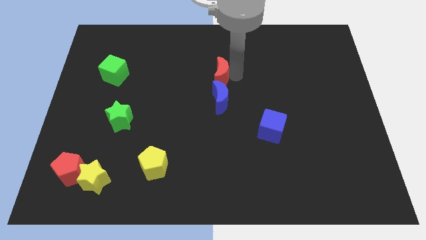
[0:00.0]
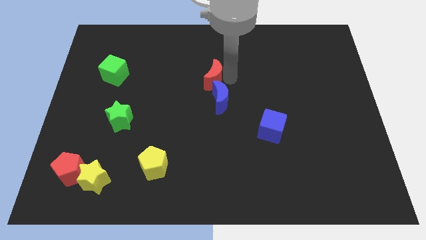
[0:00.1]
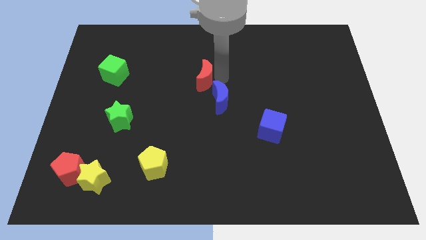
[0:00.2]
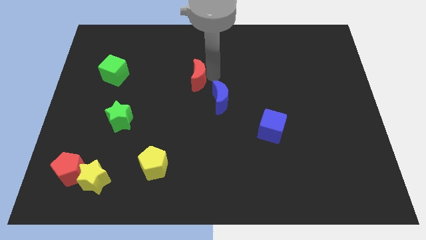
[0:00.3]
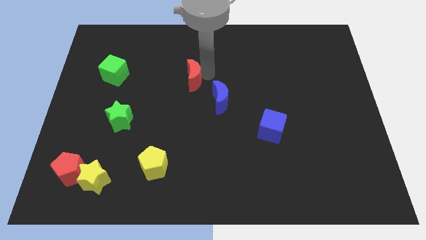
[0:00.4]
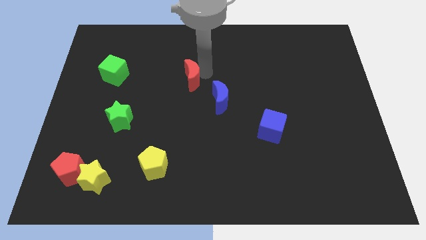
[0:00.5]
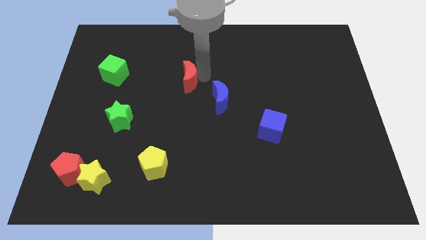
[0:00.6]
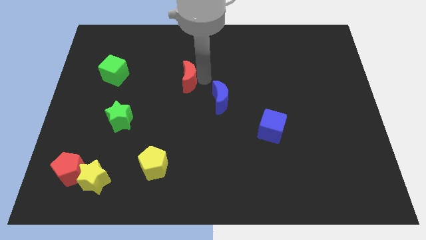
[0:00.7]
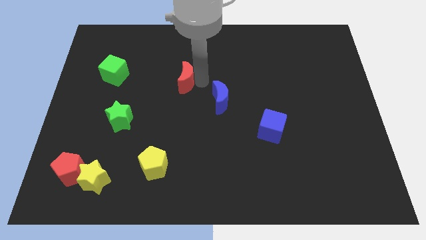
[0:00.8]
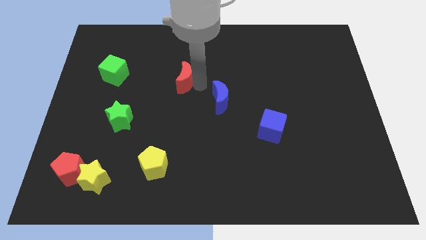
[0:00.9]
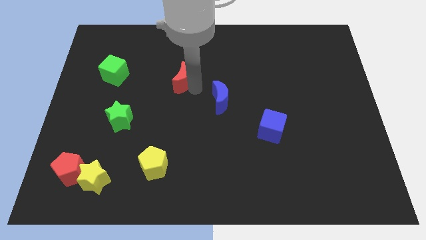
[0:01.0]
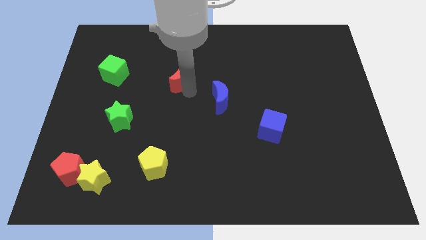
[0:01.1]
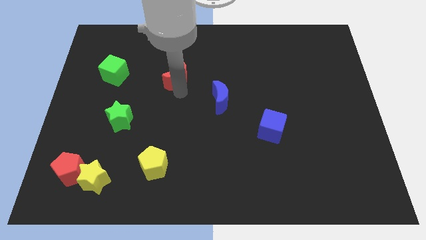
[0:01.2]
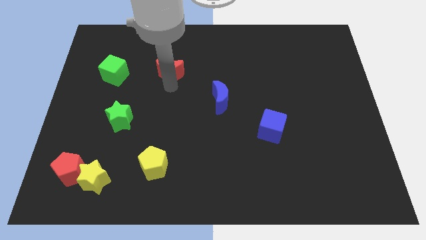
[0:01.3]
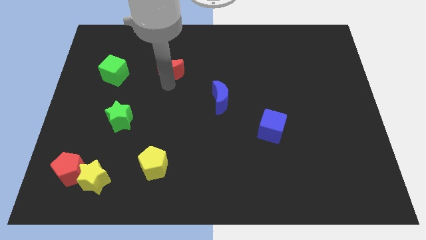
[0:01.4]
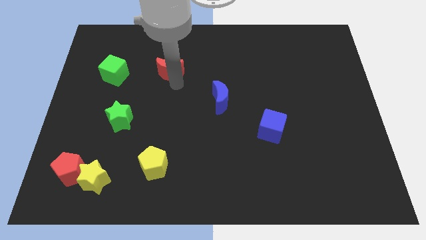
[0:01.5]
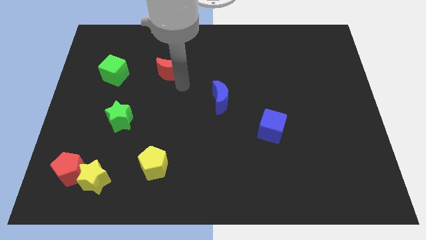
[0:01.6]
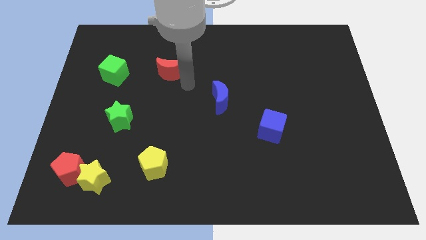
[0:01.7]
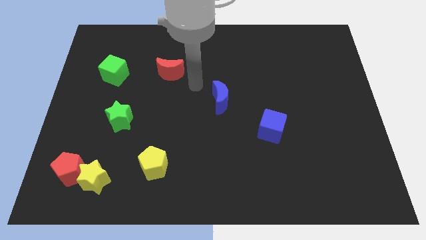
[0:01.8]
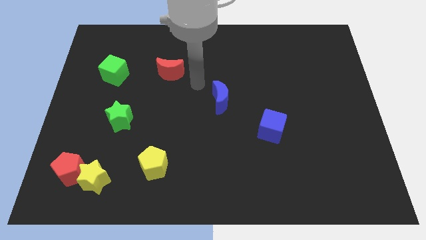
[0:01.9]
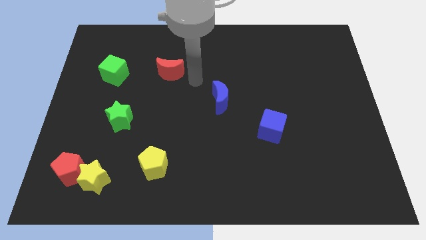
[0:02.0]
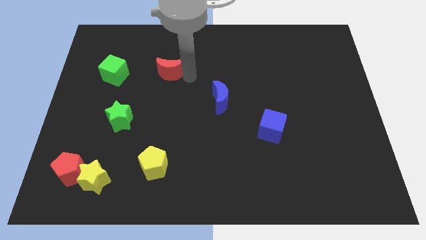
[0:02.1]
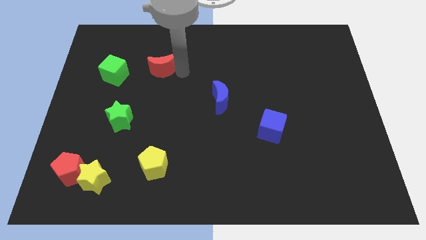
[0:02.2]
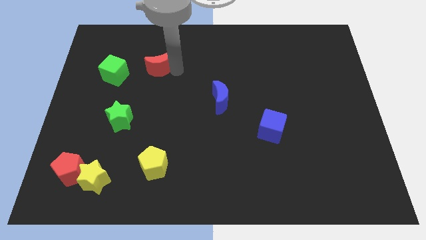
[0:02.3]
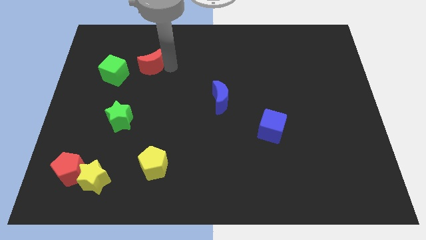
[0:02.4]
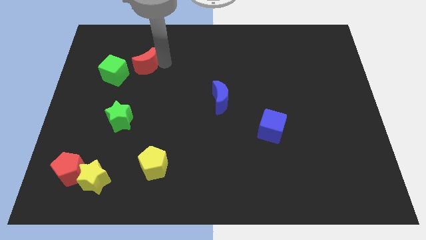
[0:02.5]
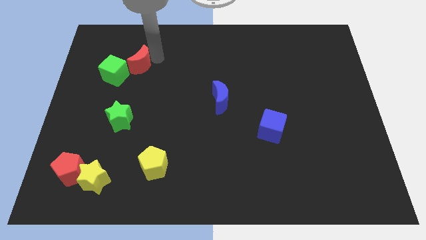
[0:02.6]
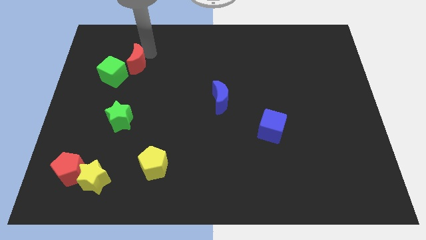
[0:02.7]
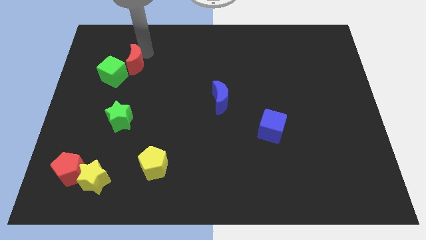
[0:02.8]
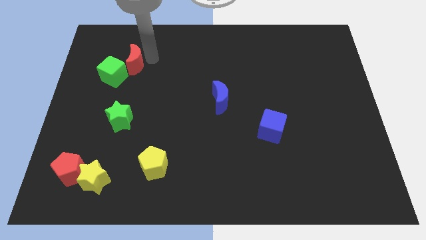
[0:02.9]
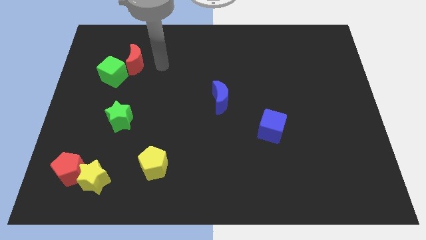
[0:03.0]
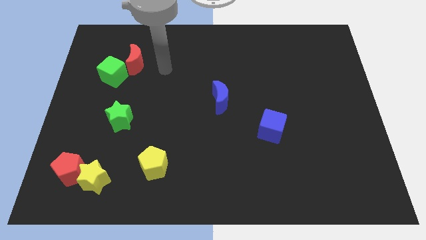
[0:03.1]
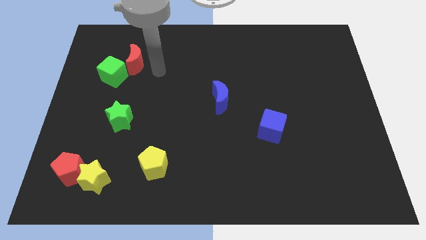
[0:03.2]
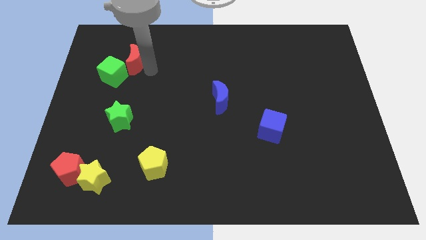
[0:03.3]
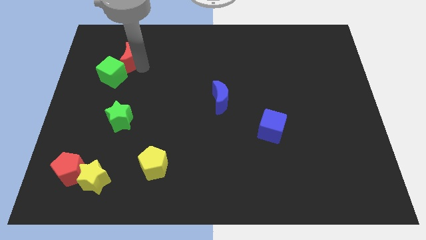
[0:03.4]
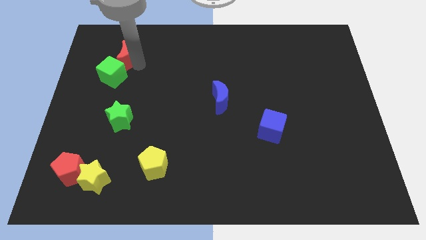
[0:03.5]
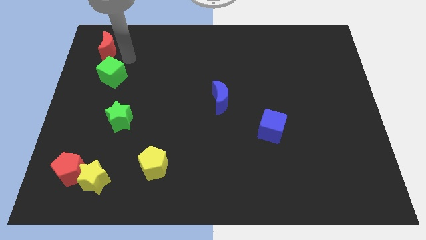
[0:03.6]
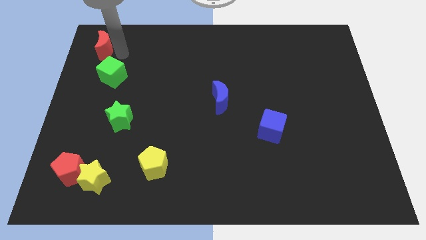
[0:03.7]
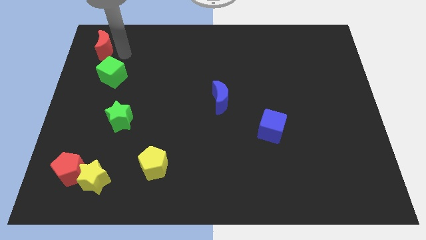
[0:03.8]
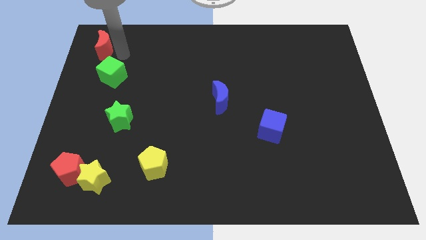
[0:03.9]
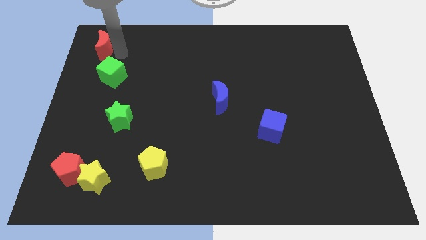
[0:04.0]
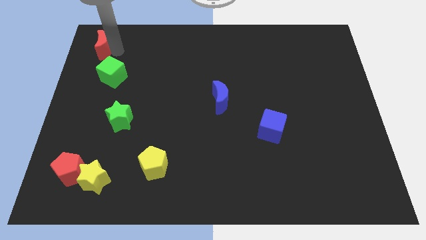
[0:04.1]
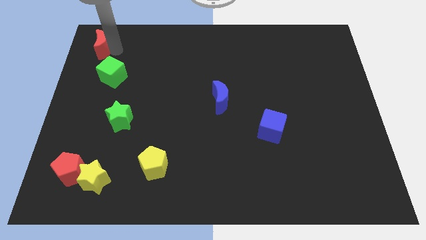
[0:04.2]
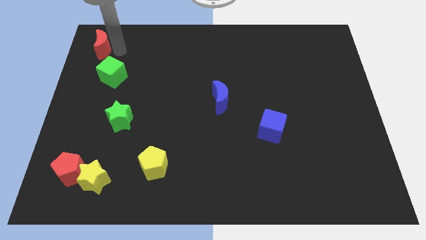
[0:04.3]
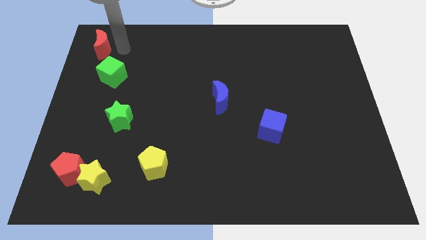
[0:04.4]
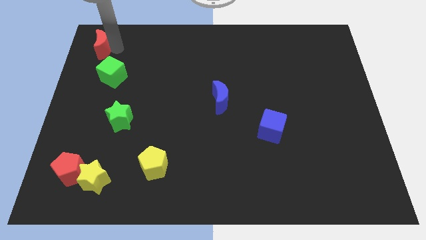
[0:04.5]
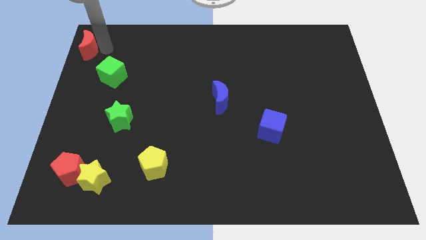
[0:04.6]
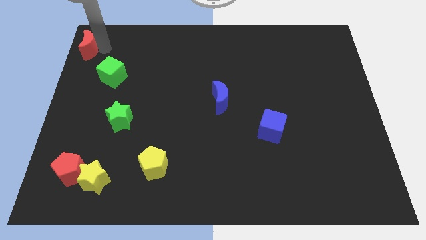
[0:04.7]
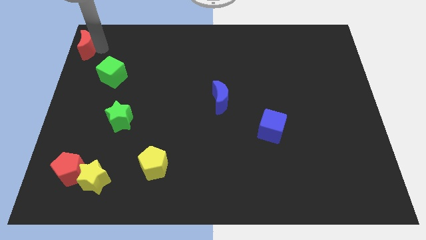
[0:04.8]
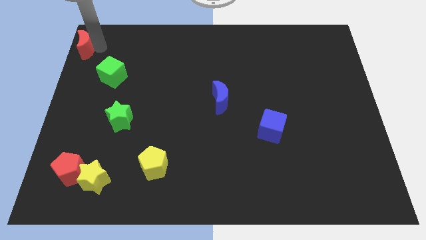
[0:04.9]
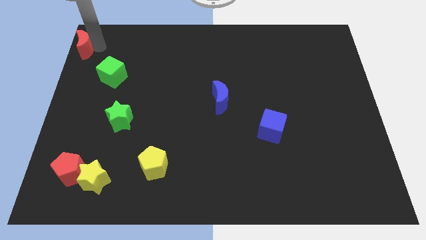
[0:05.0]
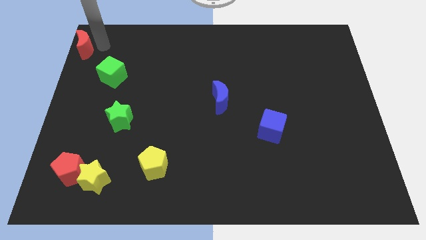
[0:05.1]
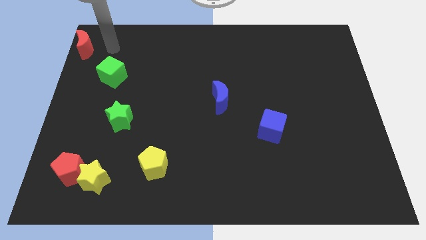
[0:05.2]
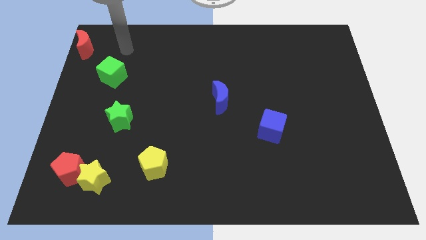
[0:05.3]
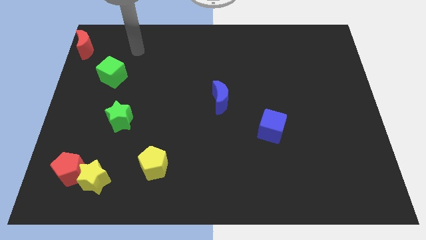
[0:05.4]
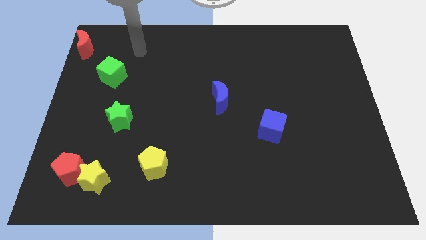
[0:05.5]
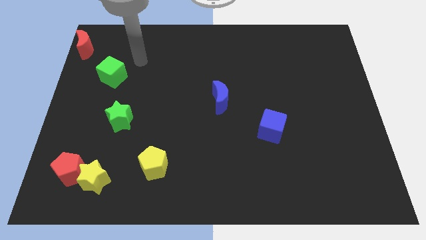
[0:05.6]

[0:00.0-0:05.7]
place the red moon at the top of the green cube

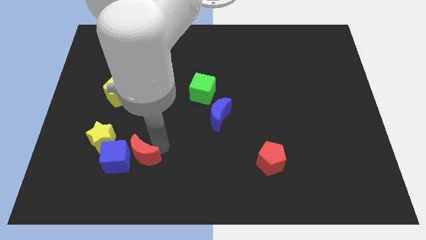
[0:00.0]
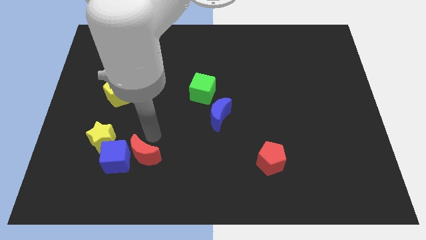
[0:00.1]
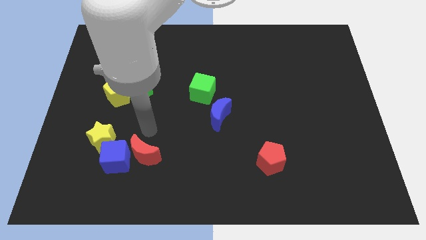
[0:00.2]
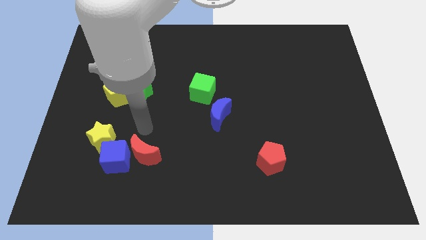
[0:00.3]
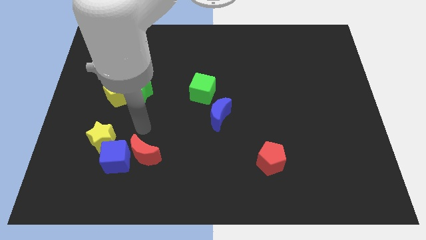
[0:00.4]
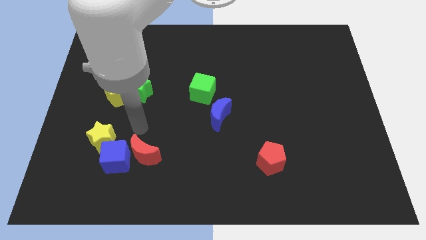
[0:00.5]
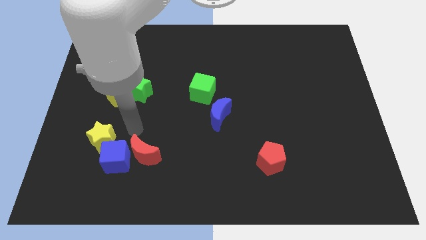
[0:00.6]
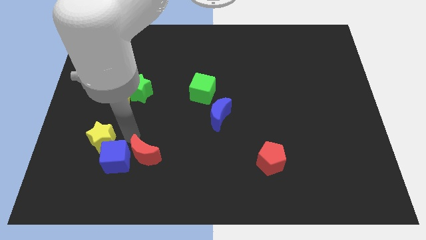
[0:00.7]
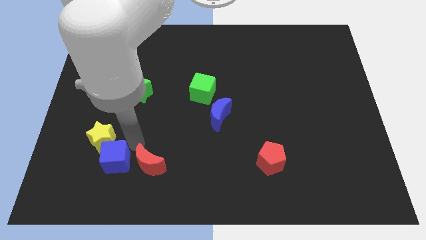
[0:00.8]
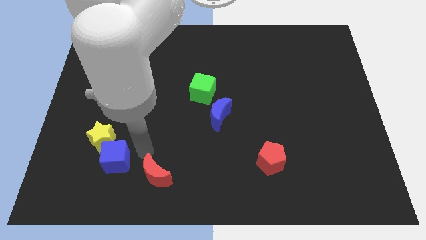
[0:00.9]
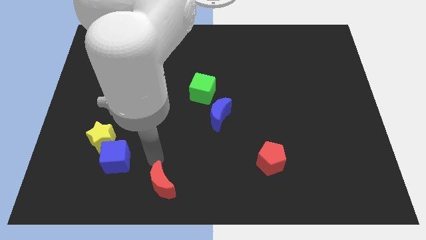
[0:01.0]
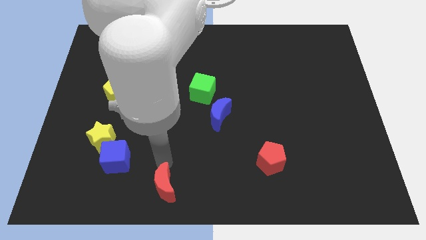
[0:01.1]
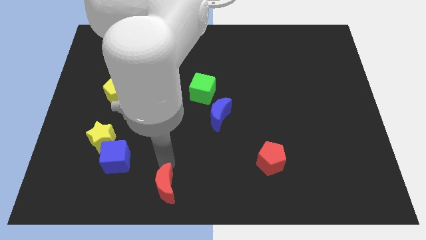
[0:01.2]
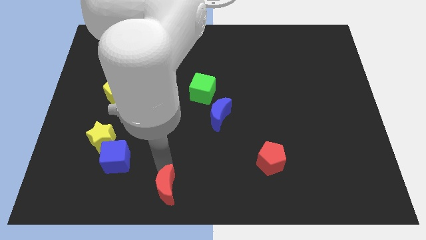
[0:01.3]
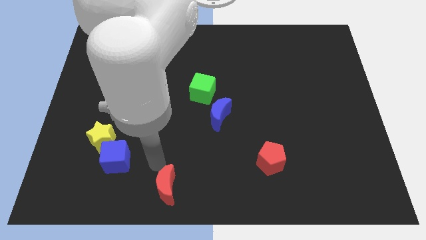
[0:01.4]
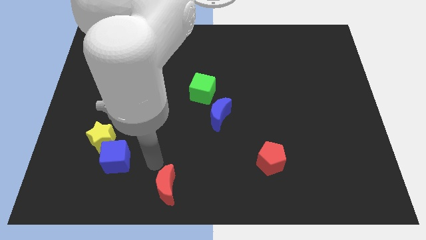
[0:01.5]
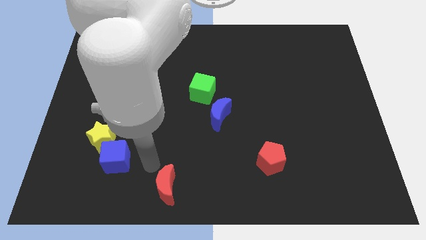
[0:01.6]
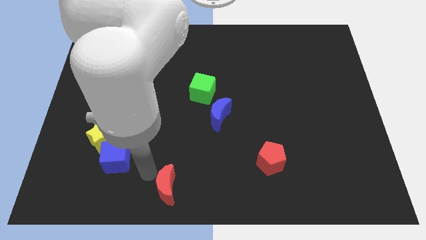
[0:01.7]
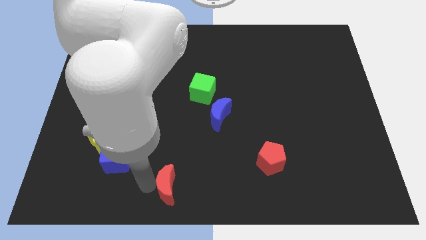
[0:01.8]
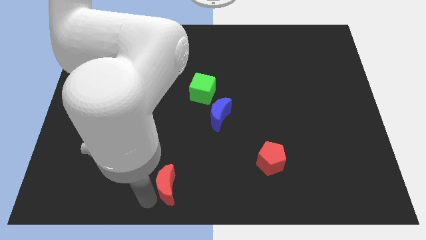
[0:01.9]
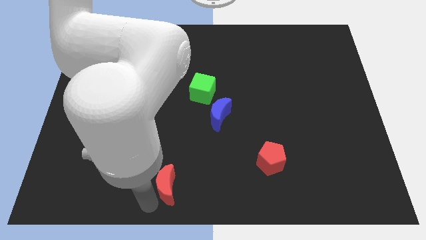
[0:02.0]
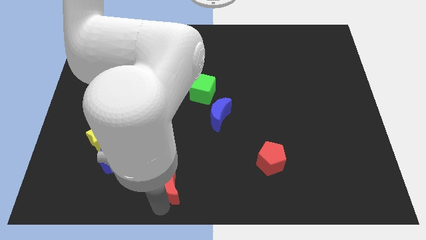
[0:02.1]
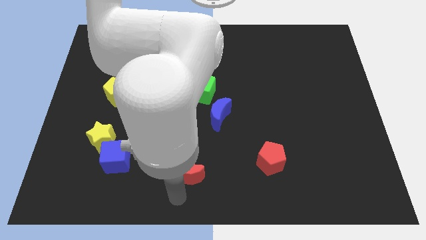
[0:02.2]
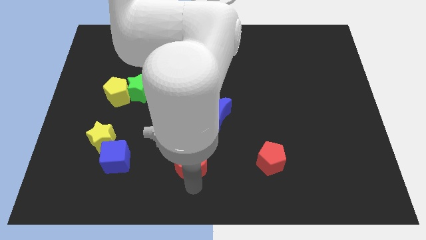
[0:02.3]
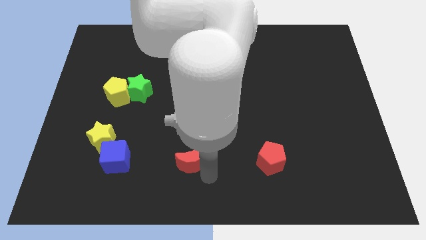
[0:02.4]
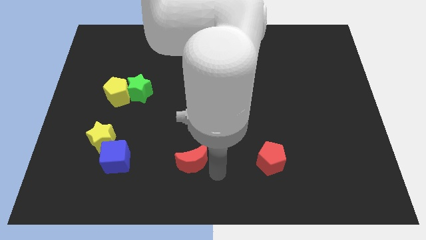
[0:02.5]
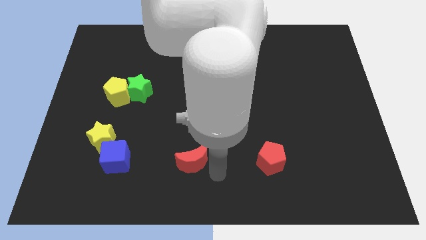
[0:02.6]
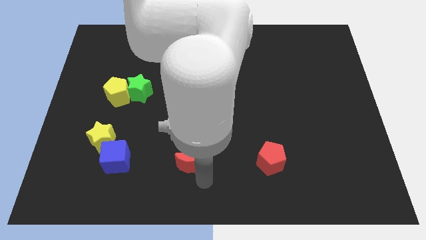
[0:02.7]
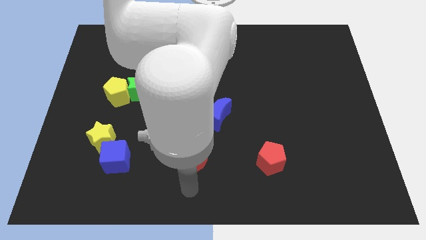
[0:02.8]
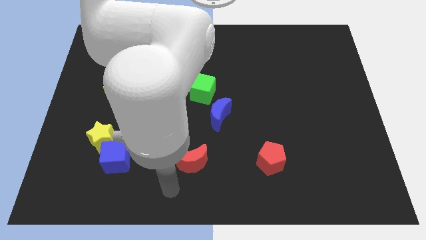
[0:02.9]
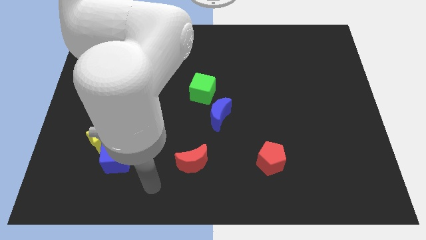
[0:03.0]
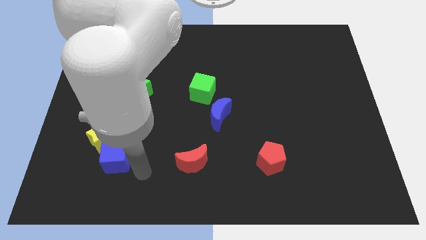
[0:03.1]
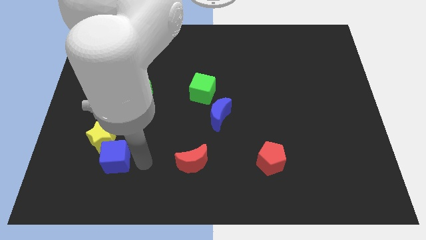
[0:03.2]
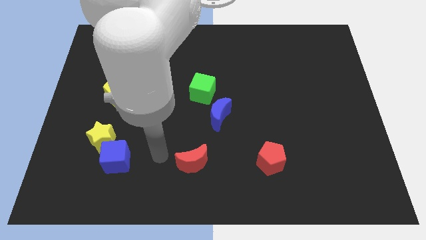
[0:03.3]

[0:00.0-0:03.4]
move red crescent in between two blocks
